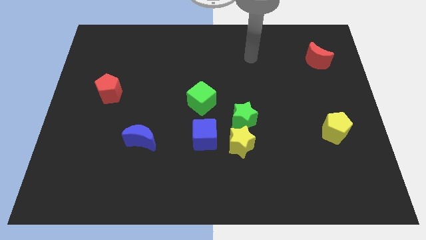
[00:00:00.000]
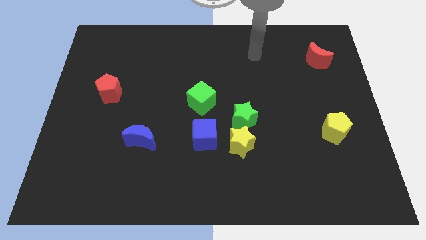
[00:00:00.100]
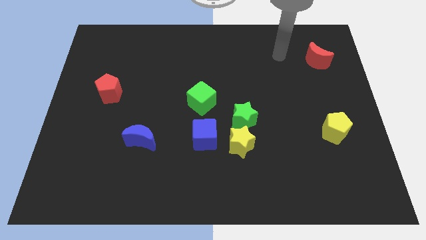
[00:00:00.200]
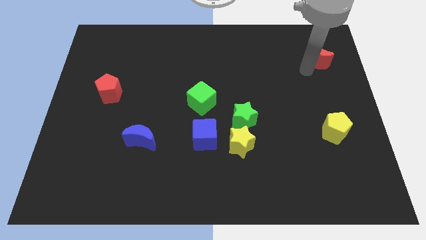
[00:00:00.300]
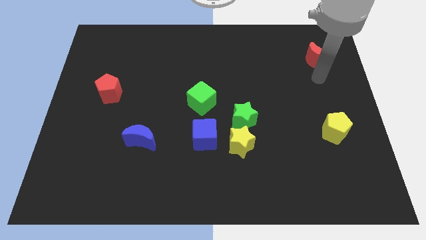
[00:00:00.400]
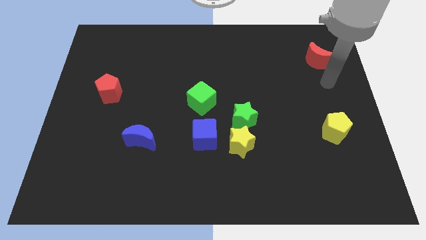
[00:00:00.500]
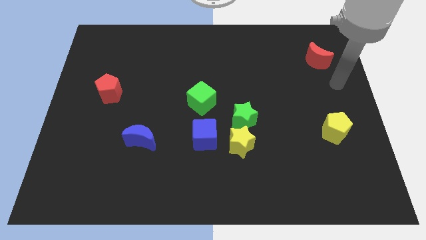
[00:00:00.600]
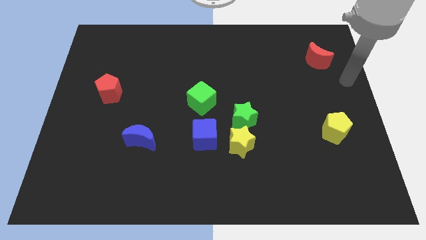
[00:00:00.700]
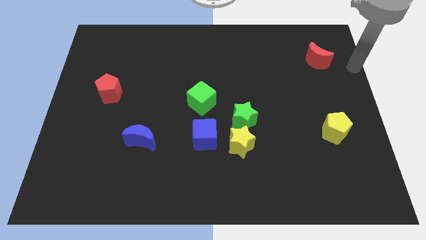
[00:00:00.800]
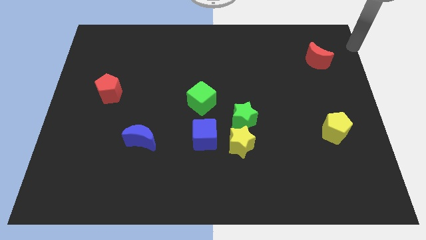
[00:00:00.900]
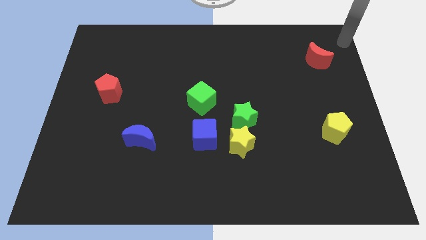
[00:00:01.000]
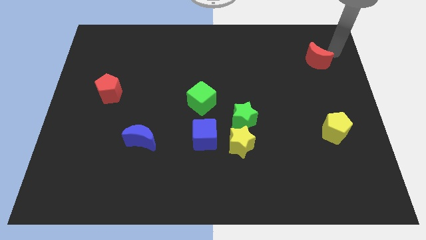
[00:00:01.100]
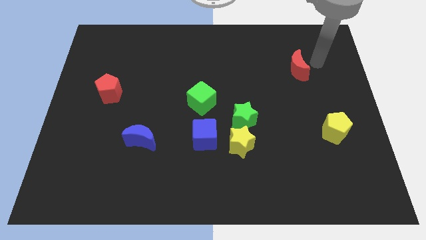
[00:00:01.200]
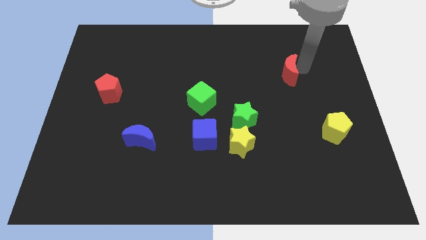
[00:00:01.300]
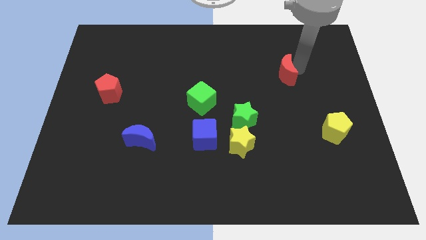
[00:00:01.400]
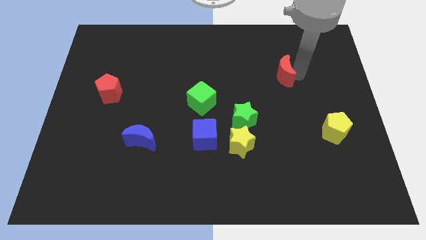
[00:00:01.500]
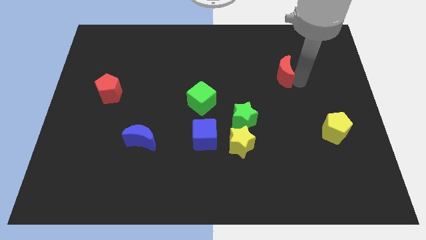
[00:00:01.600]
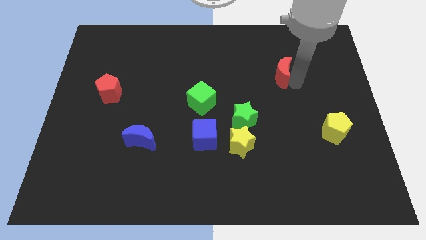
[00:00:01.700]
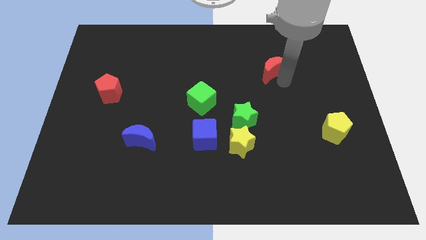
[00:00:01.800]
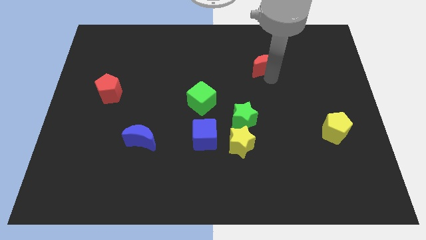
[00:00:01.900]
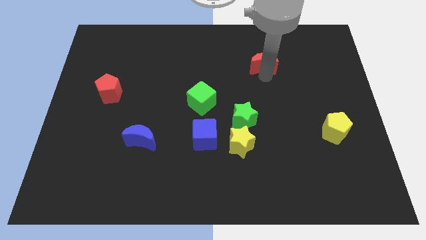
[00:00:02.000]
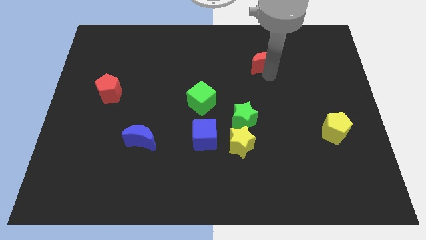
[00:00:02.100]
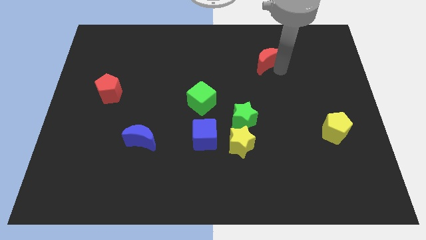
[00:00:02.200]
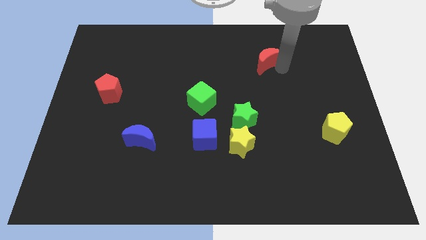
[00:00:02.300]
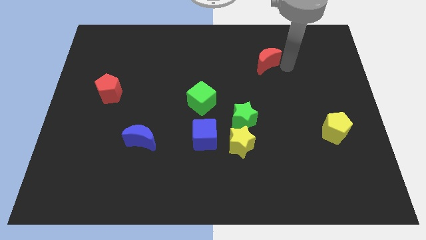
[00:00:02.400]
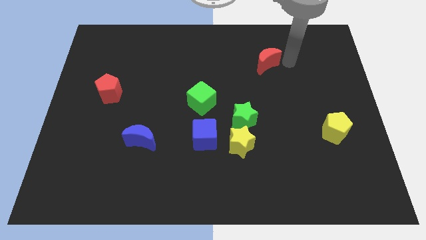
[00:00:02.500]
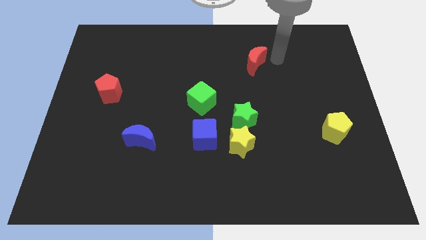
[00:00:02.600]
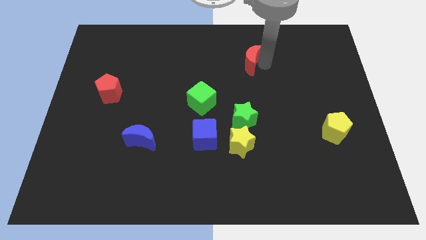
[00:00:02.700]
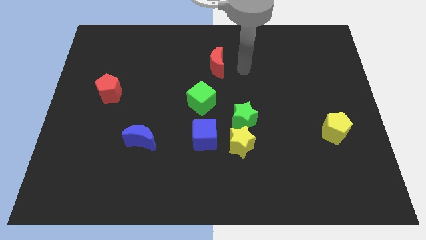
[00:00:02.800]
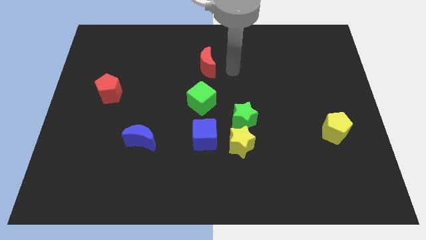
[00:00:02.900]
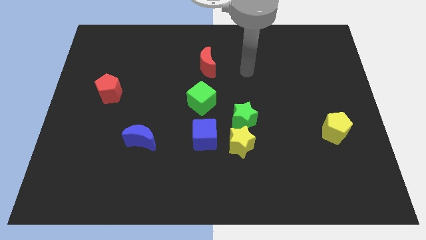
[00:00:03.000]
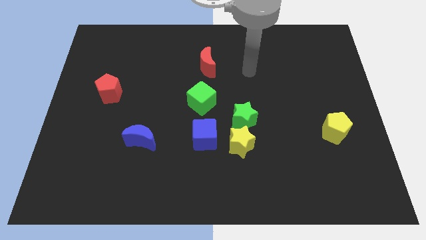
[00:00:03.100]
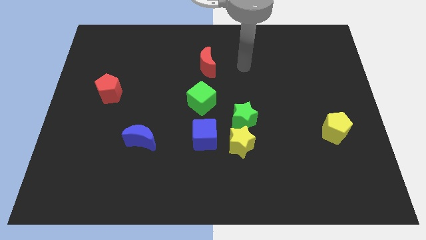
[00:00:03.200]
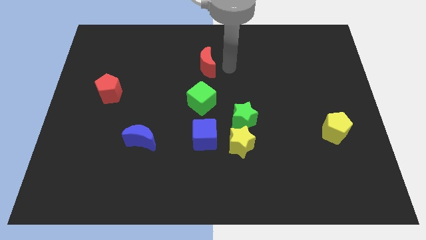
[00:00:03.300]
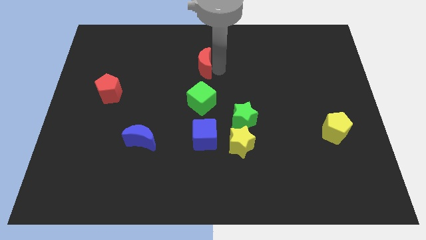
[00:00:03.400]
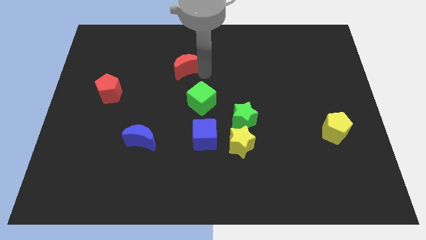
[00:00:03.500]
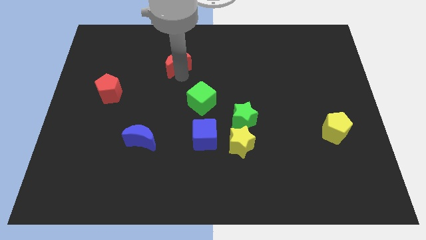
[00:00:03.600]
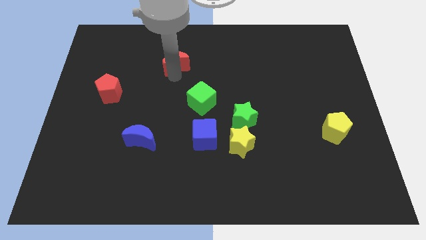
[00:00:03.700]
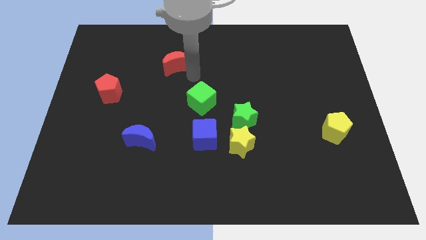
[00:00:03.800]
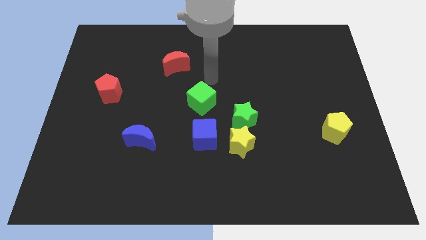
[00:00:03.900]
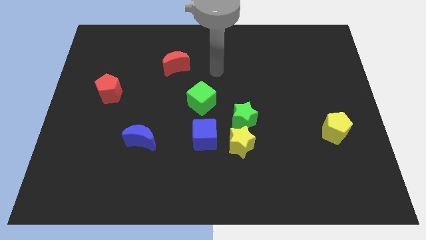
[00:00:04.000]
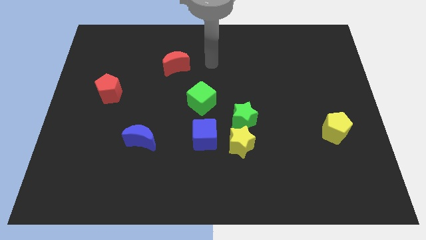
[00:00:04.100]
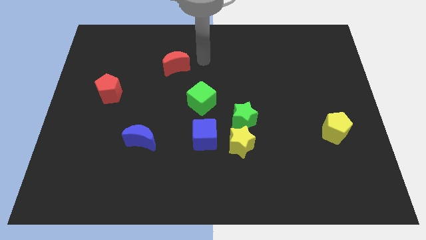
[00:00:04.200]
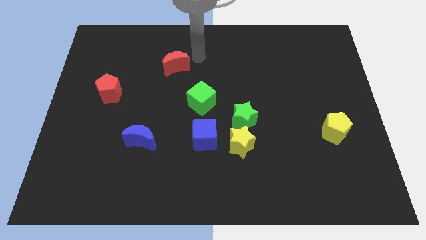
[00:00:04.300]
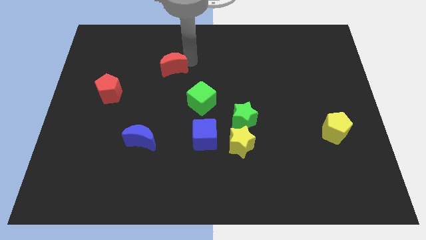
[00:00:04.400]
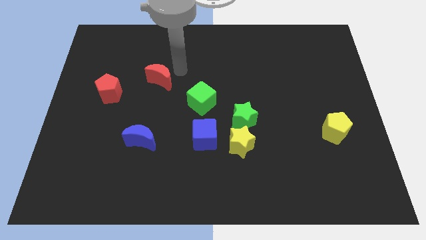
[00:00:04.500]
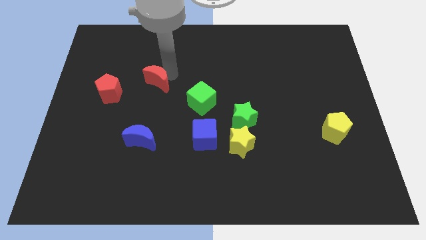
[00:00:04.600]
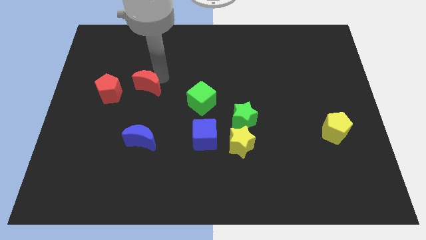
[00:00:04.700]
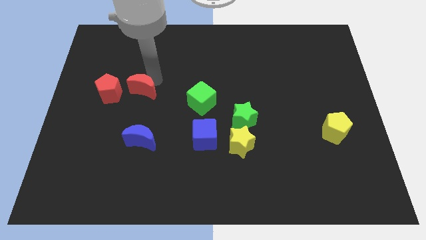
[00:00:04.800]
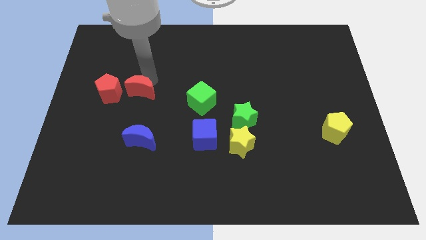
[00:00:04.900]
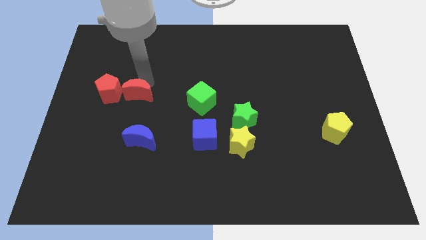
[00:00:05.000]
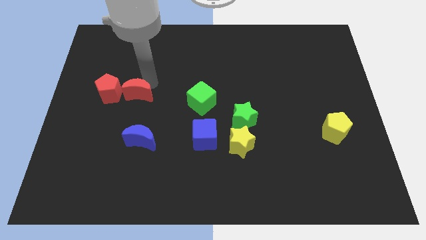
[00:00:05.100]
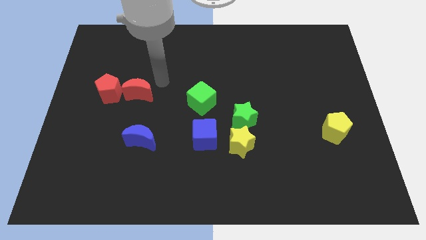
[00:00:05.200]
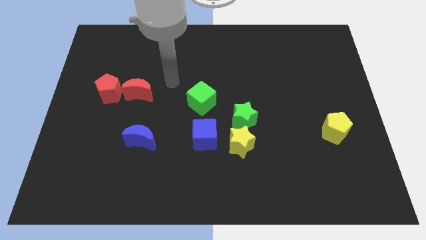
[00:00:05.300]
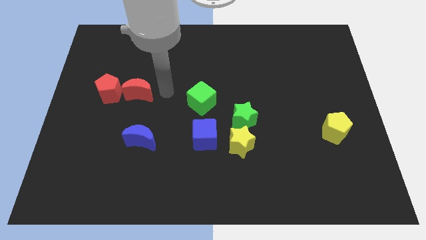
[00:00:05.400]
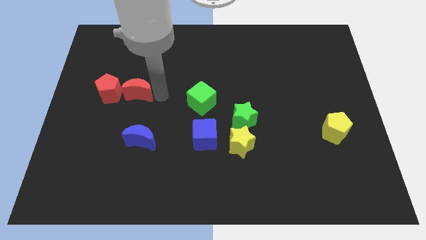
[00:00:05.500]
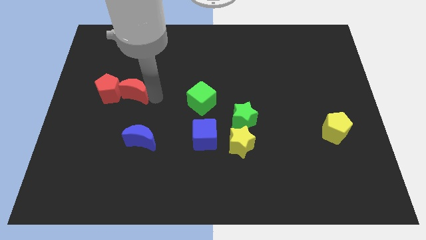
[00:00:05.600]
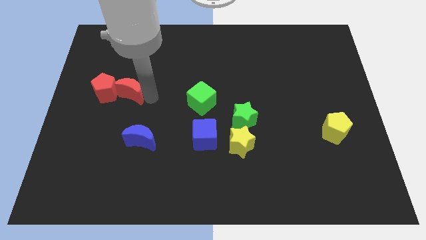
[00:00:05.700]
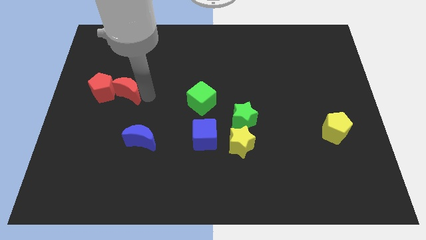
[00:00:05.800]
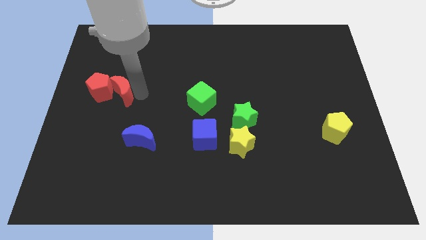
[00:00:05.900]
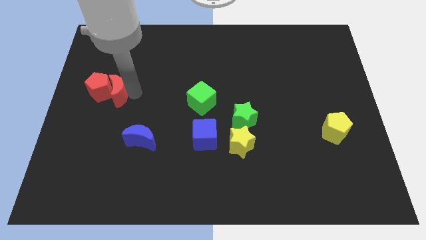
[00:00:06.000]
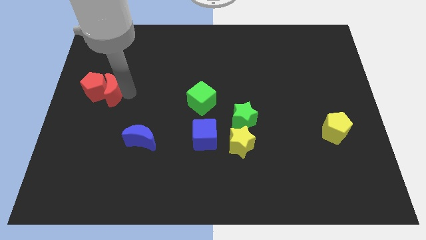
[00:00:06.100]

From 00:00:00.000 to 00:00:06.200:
move the red moon to the red pentagon

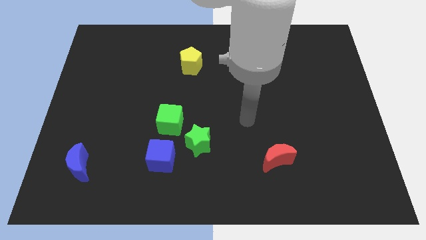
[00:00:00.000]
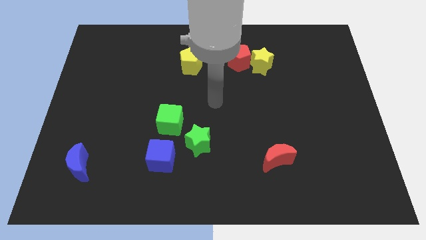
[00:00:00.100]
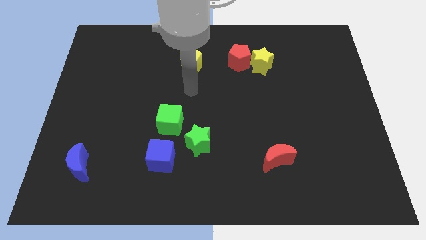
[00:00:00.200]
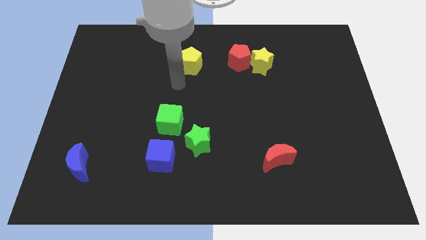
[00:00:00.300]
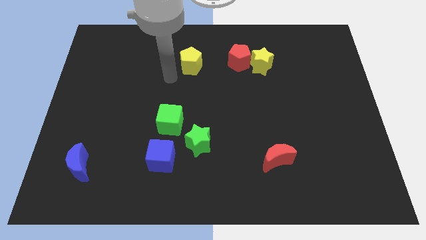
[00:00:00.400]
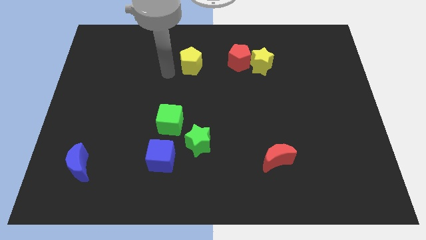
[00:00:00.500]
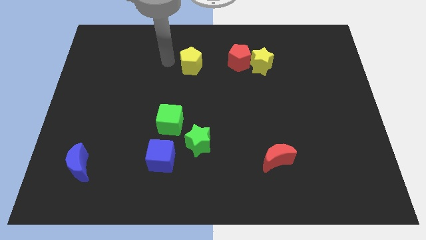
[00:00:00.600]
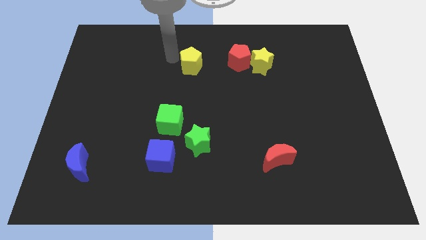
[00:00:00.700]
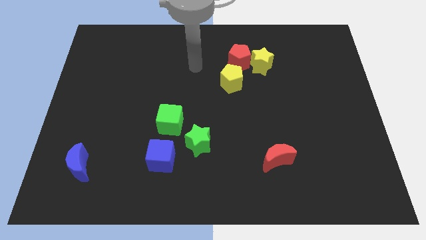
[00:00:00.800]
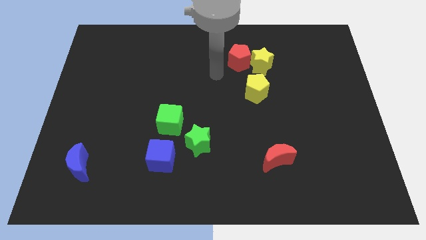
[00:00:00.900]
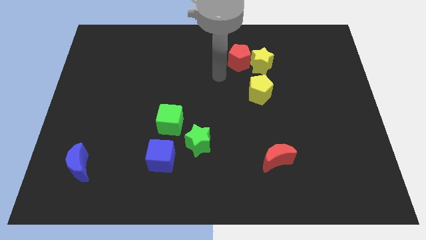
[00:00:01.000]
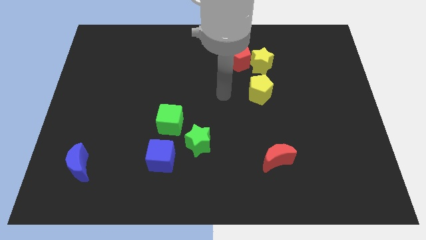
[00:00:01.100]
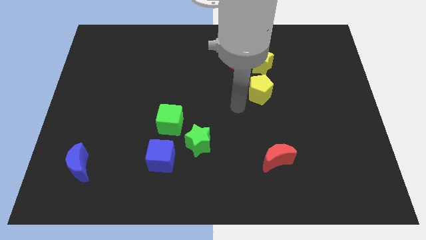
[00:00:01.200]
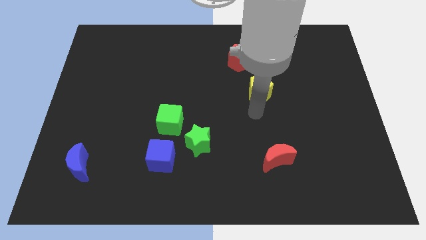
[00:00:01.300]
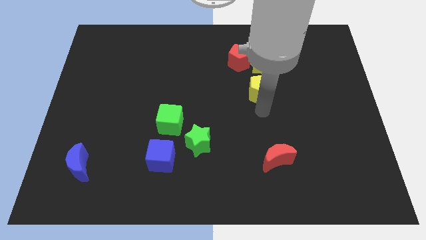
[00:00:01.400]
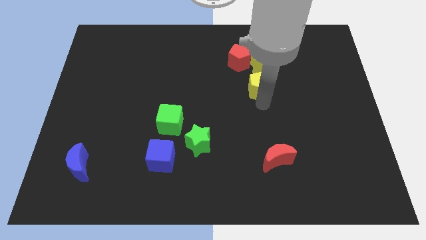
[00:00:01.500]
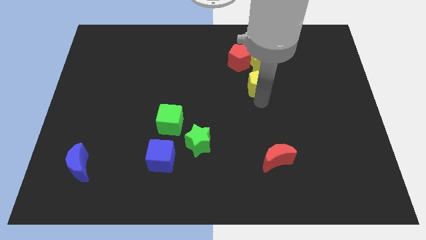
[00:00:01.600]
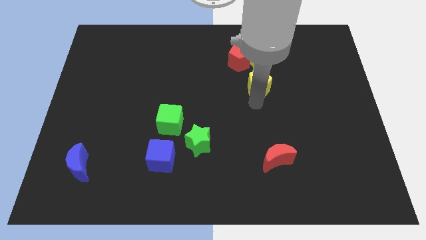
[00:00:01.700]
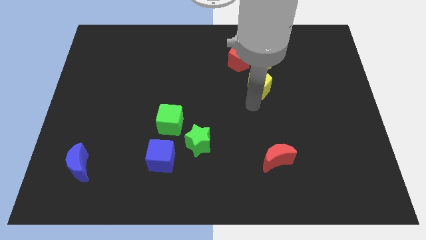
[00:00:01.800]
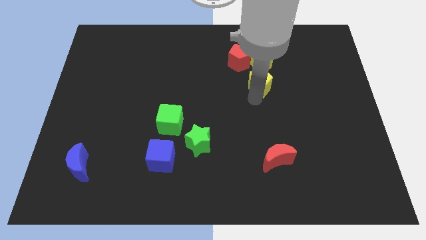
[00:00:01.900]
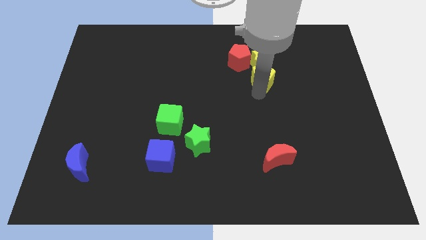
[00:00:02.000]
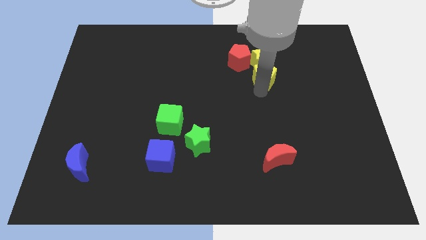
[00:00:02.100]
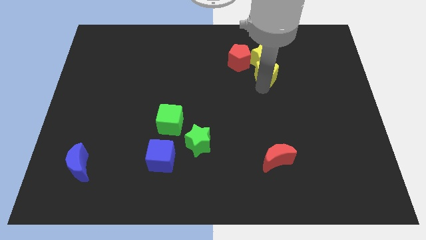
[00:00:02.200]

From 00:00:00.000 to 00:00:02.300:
push the yellow pentagon towards the yellow star
